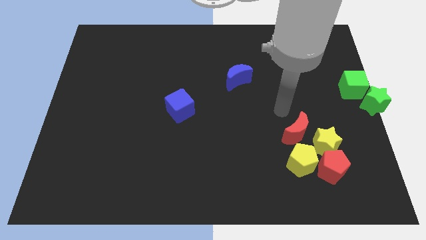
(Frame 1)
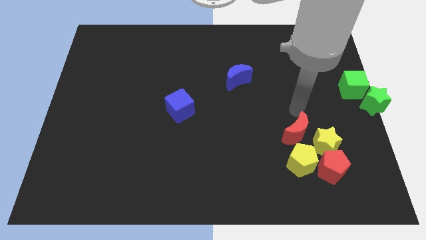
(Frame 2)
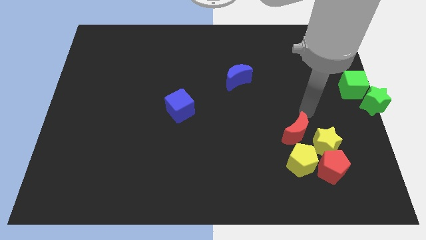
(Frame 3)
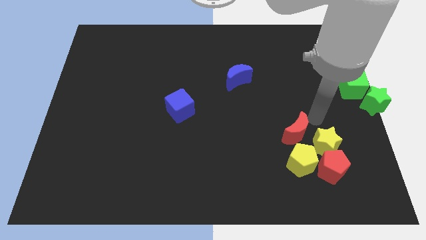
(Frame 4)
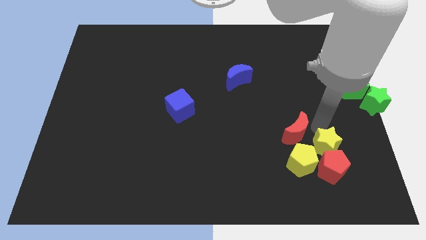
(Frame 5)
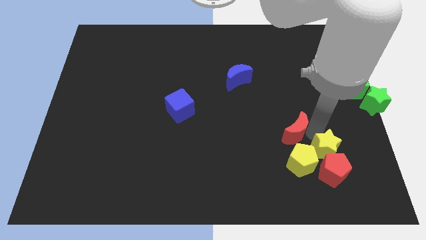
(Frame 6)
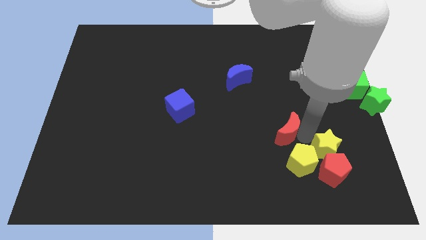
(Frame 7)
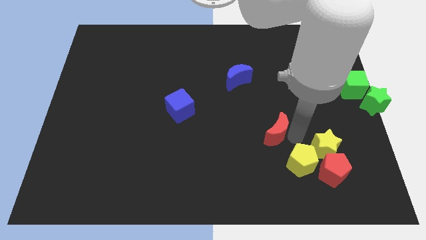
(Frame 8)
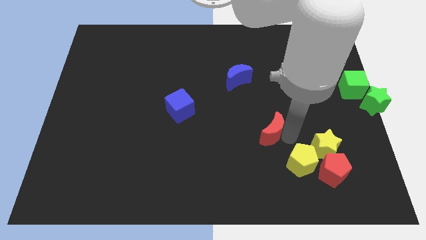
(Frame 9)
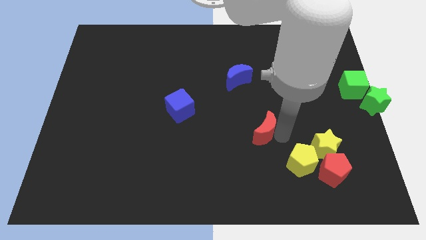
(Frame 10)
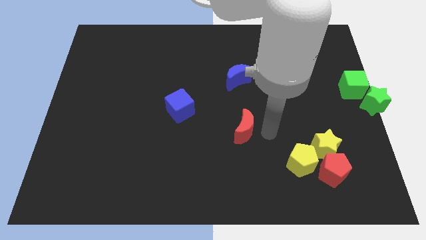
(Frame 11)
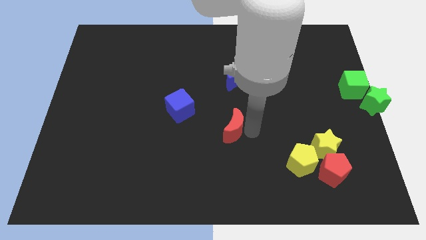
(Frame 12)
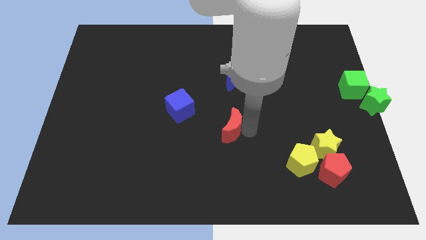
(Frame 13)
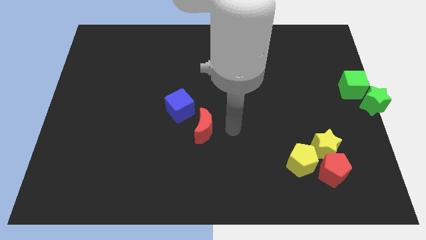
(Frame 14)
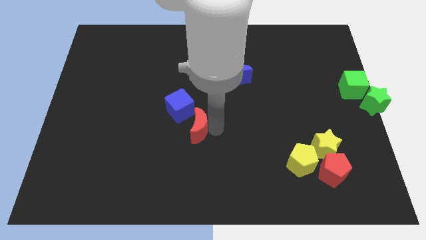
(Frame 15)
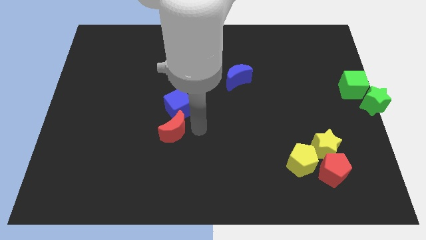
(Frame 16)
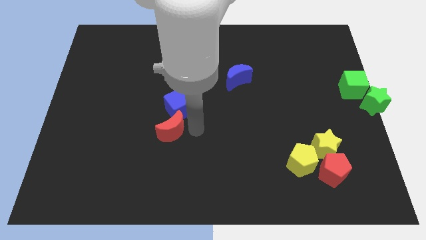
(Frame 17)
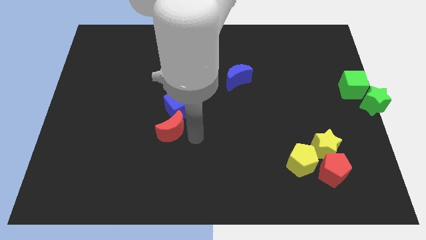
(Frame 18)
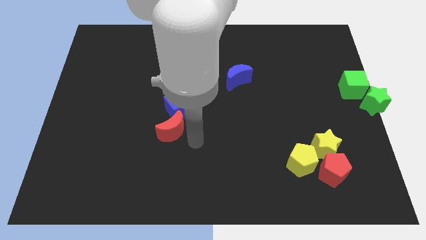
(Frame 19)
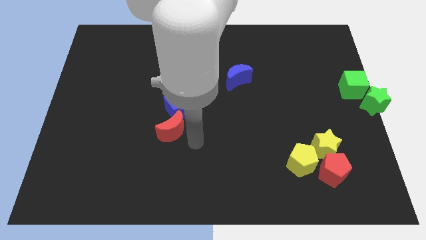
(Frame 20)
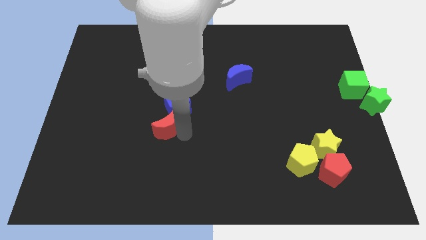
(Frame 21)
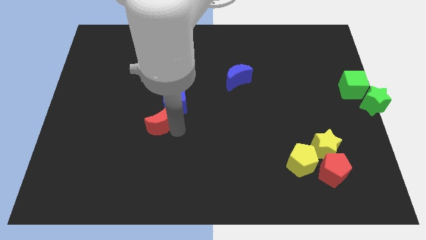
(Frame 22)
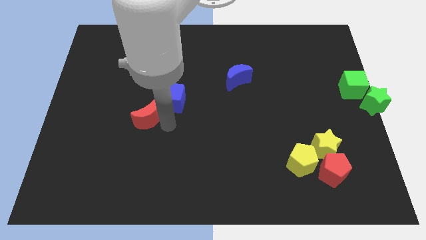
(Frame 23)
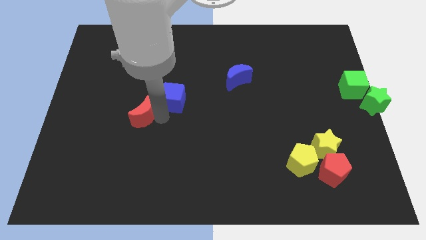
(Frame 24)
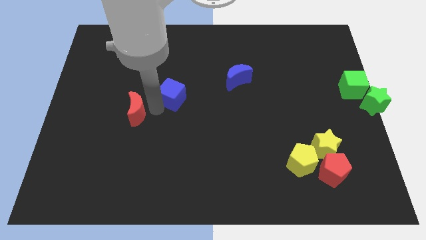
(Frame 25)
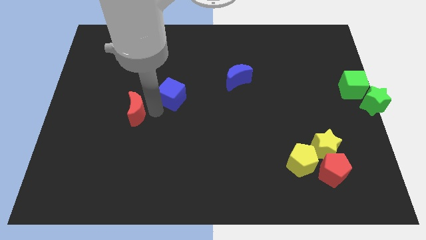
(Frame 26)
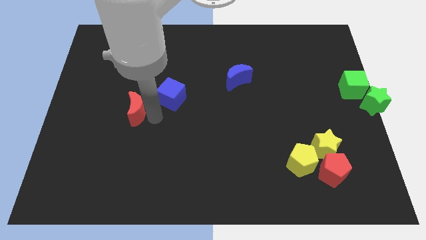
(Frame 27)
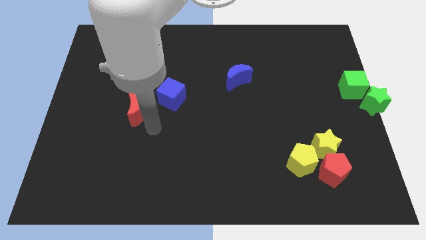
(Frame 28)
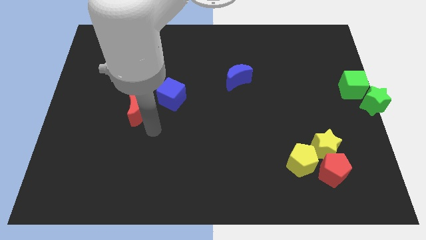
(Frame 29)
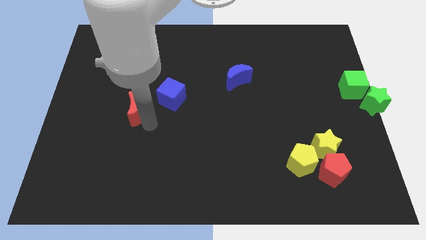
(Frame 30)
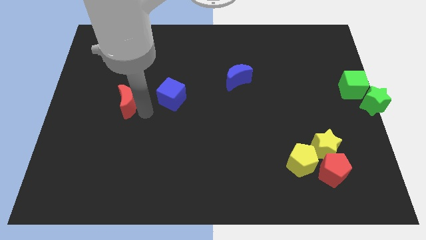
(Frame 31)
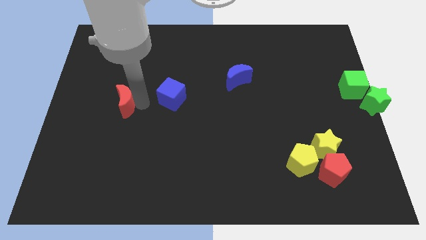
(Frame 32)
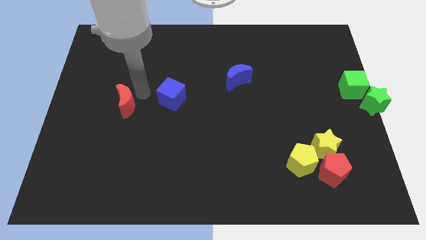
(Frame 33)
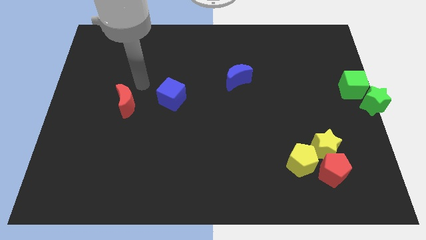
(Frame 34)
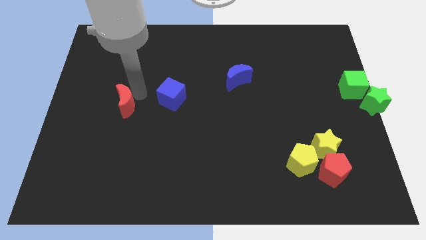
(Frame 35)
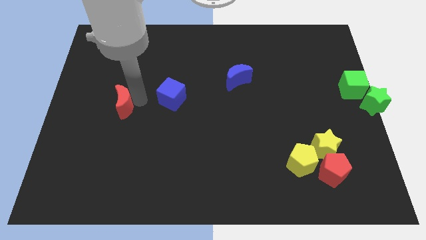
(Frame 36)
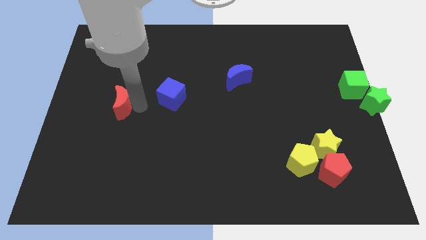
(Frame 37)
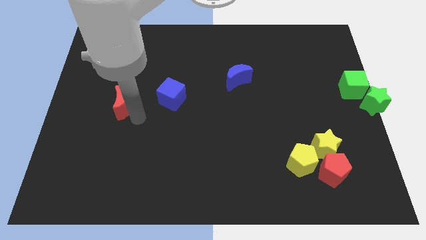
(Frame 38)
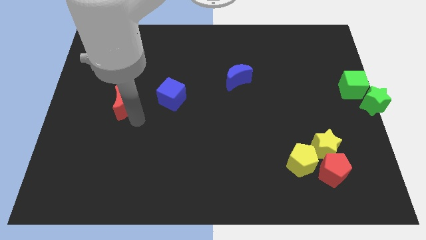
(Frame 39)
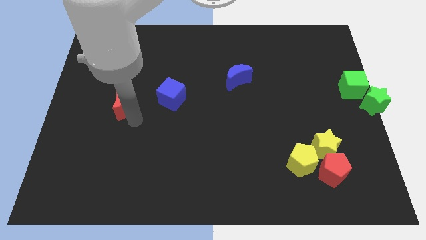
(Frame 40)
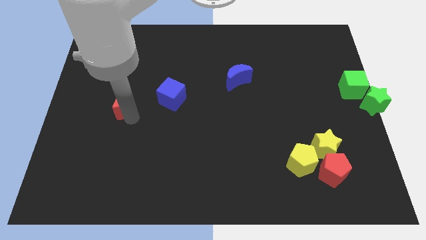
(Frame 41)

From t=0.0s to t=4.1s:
separate red crescent from yellow blocks

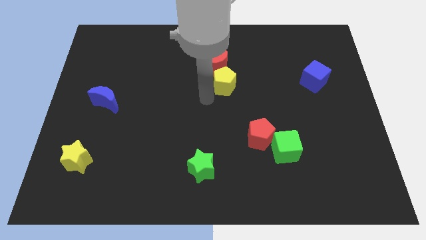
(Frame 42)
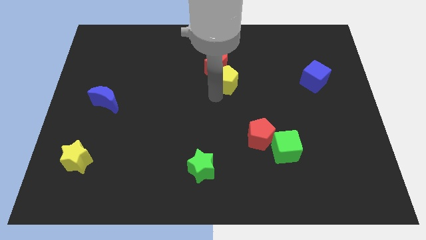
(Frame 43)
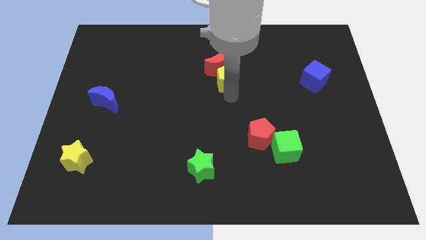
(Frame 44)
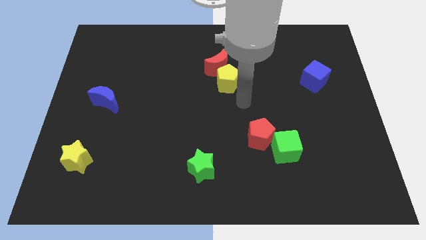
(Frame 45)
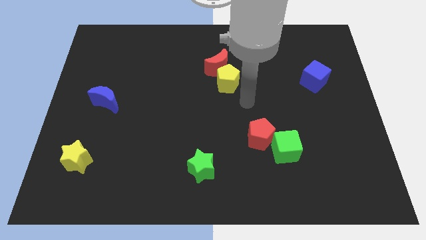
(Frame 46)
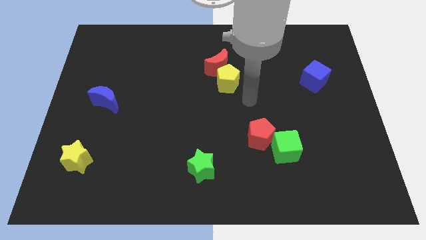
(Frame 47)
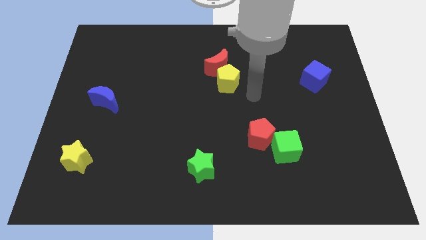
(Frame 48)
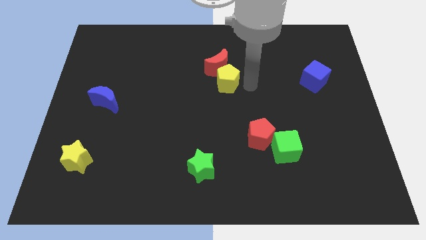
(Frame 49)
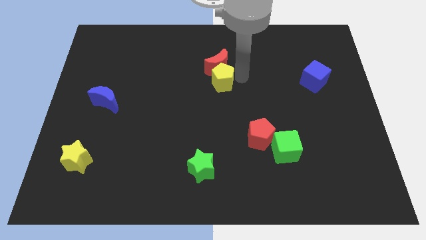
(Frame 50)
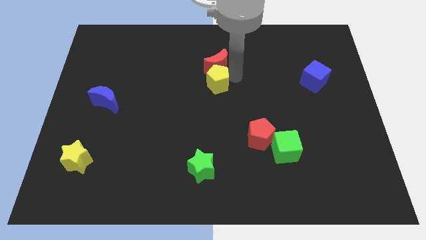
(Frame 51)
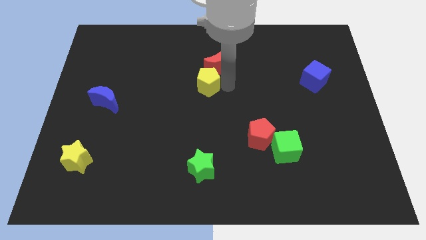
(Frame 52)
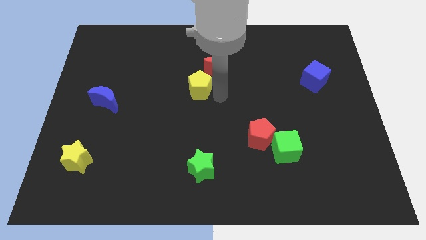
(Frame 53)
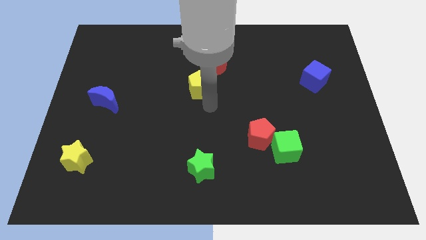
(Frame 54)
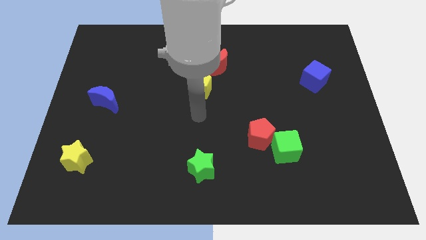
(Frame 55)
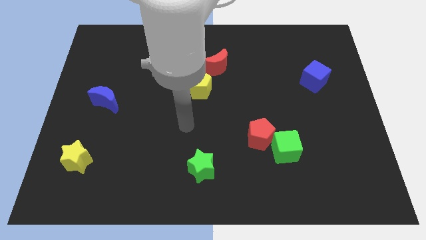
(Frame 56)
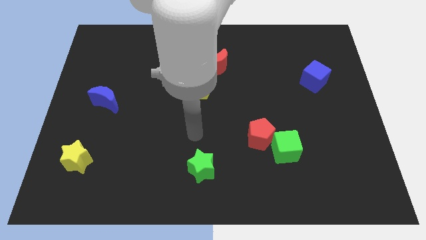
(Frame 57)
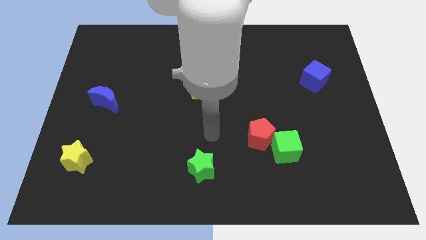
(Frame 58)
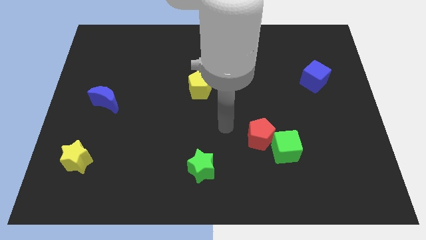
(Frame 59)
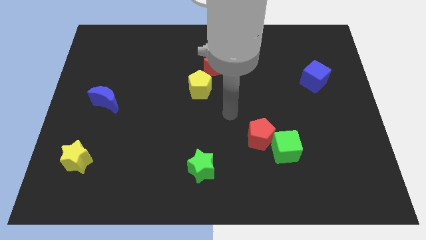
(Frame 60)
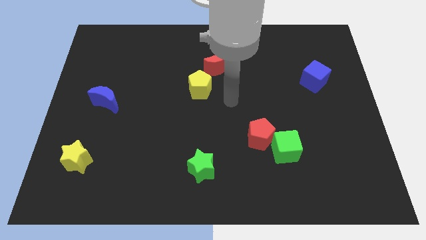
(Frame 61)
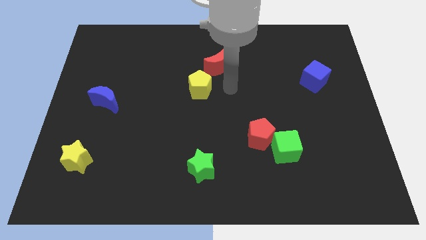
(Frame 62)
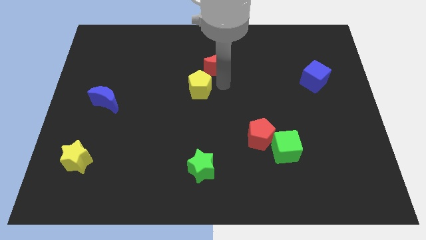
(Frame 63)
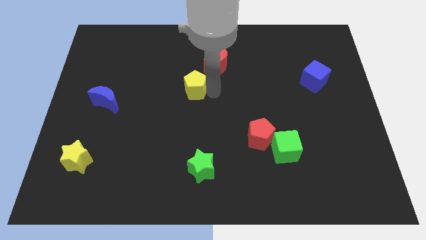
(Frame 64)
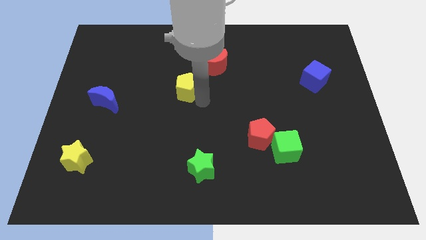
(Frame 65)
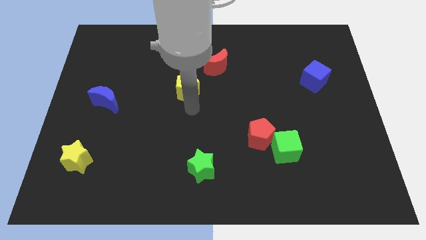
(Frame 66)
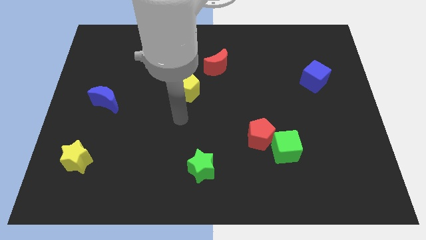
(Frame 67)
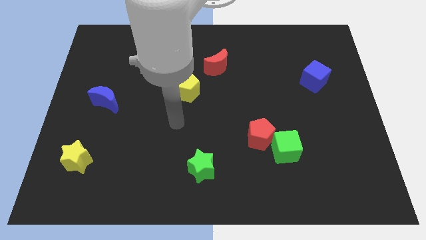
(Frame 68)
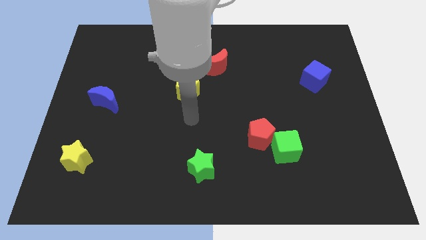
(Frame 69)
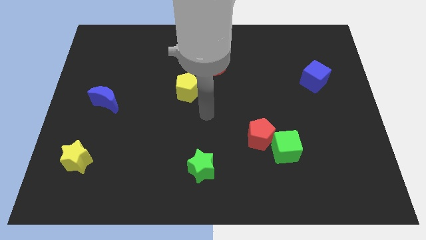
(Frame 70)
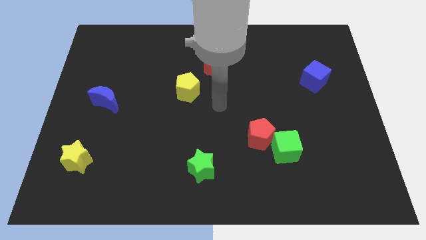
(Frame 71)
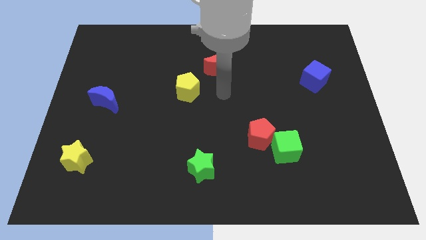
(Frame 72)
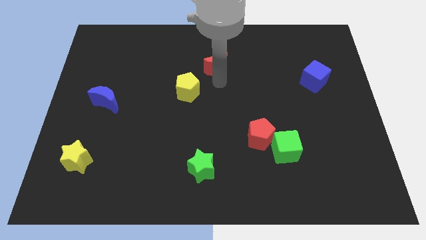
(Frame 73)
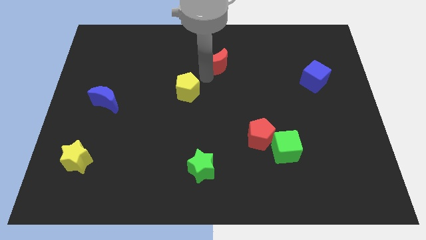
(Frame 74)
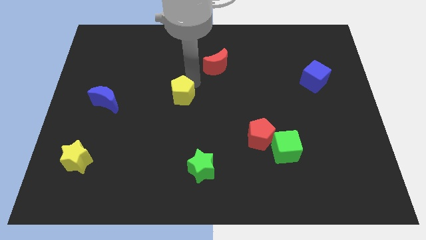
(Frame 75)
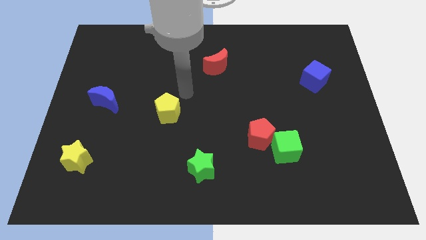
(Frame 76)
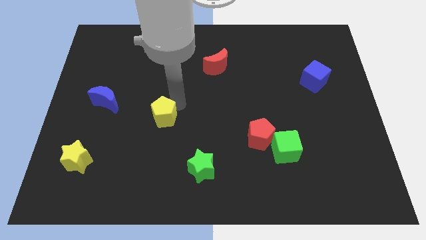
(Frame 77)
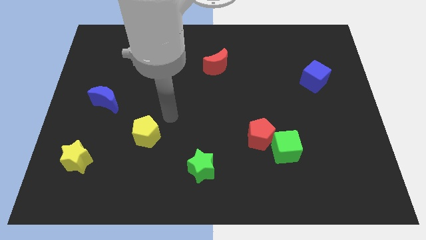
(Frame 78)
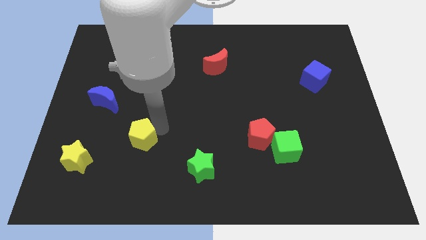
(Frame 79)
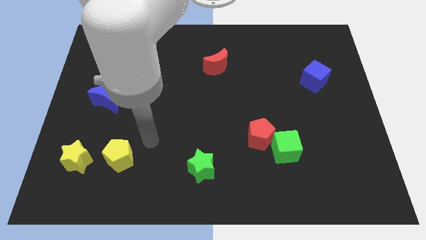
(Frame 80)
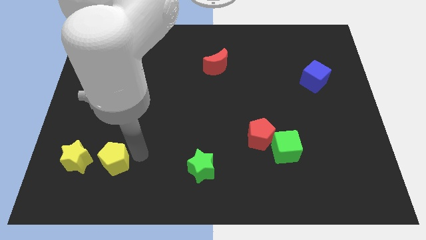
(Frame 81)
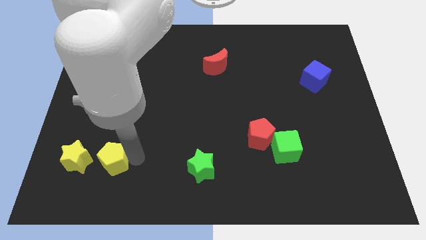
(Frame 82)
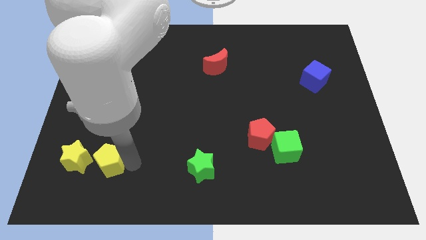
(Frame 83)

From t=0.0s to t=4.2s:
place yellow pentagon right to yellow star

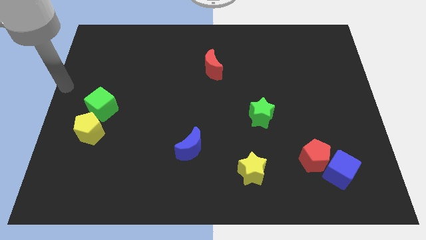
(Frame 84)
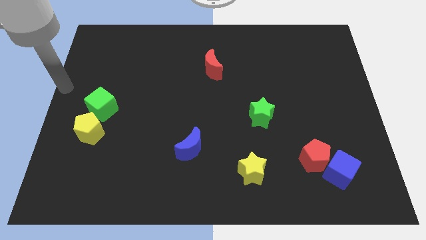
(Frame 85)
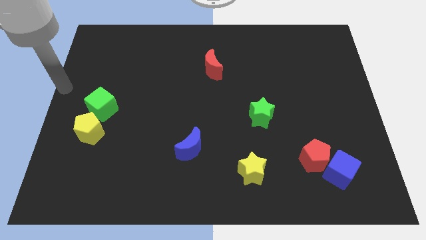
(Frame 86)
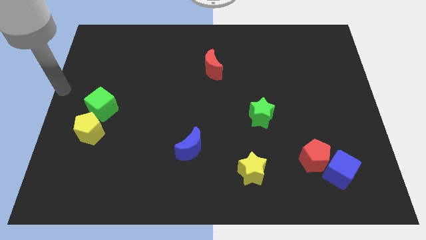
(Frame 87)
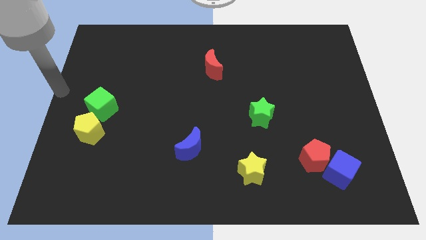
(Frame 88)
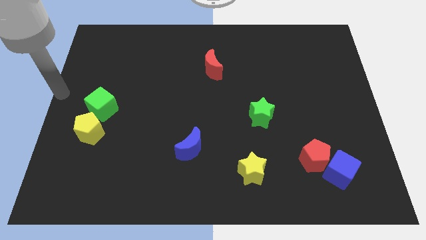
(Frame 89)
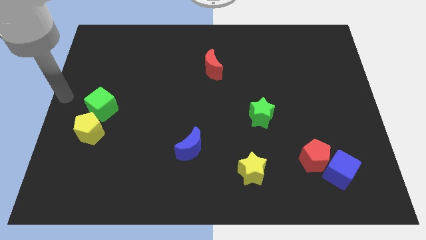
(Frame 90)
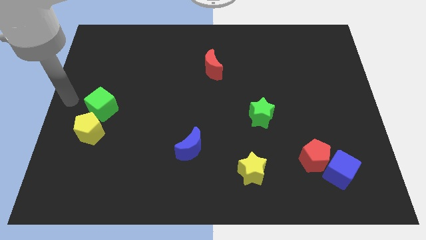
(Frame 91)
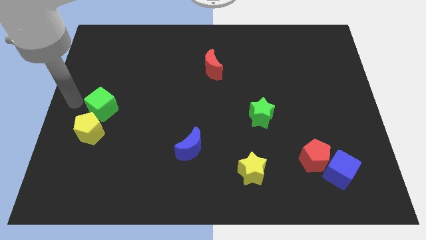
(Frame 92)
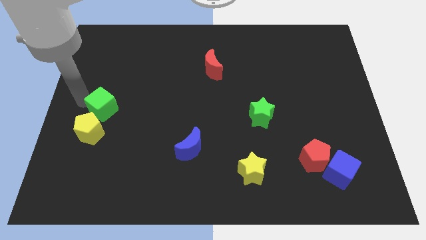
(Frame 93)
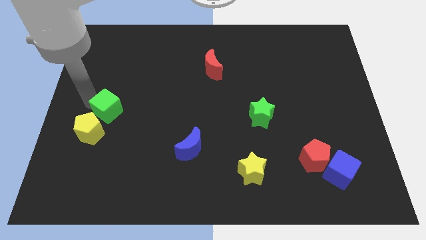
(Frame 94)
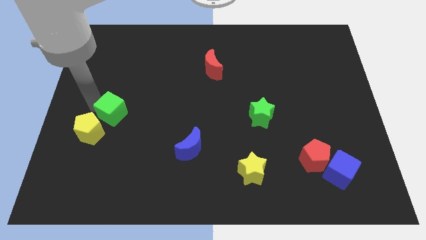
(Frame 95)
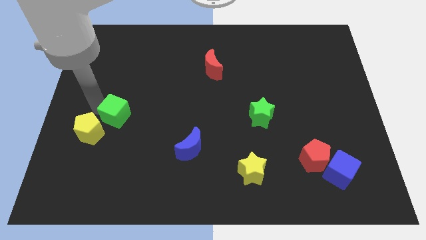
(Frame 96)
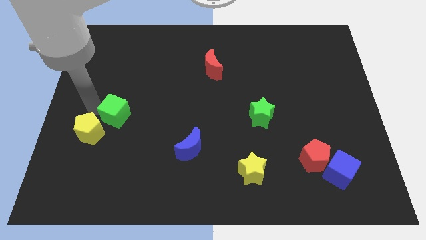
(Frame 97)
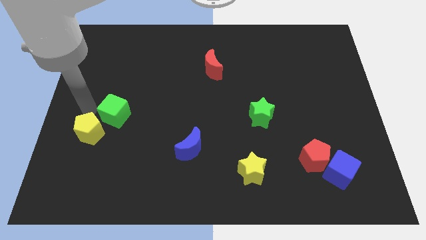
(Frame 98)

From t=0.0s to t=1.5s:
separate the green cube from the yellow pentagon
